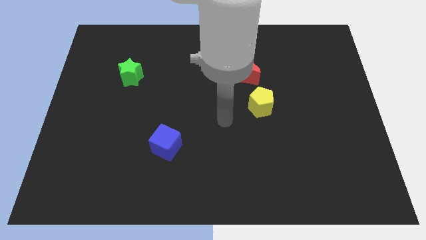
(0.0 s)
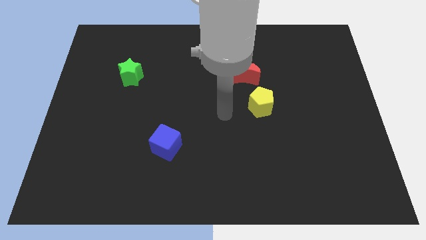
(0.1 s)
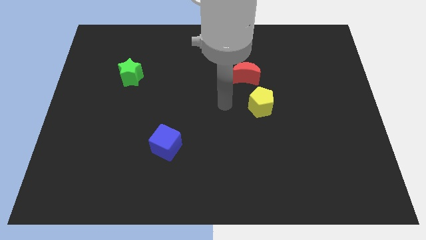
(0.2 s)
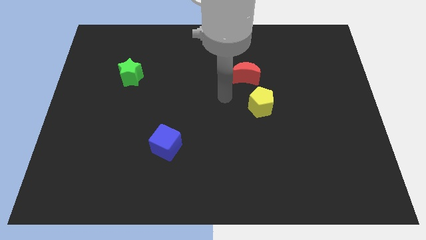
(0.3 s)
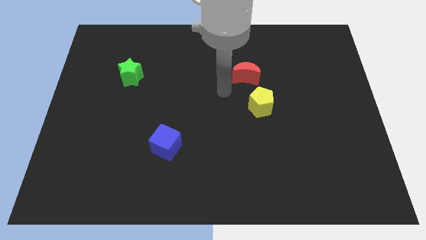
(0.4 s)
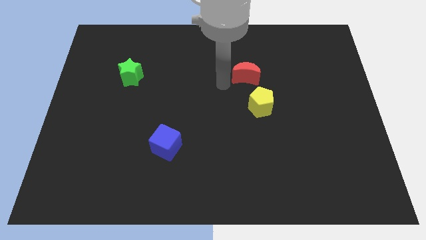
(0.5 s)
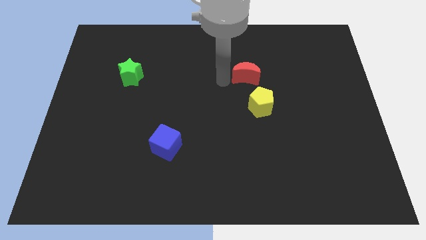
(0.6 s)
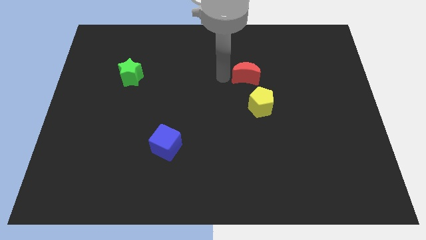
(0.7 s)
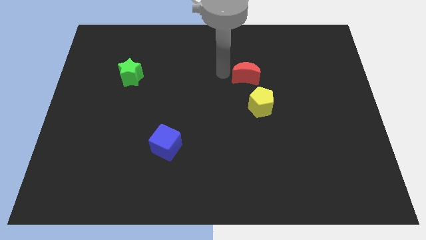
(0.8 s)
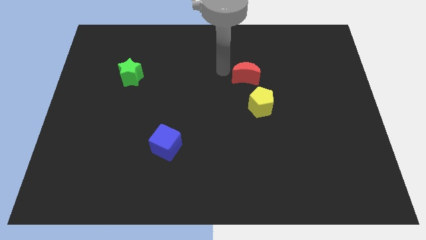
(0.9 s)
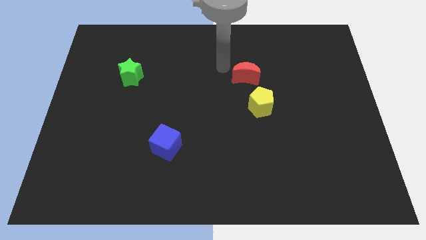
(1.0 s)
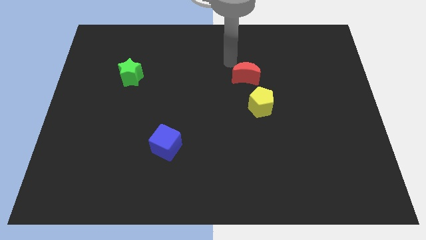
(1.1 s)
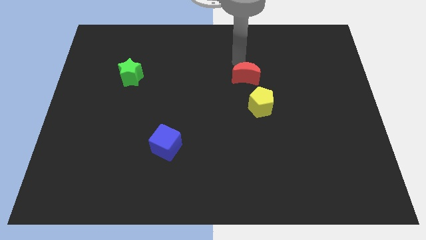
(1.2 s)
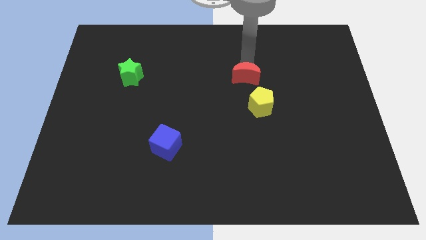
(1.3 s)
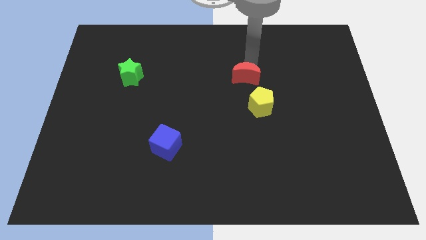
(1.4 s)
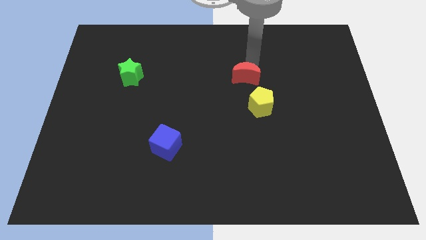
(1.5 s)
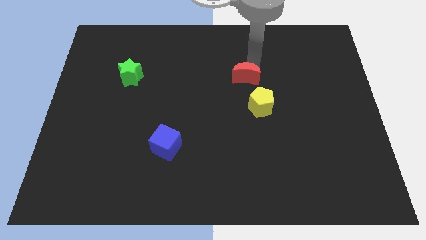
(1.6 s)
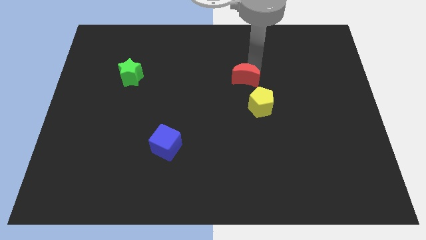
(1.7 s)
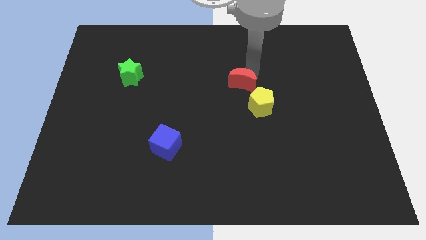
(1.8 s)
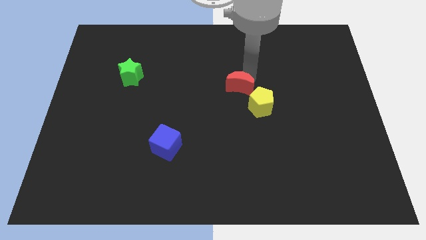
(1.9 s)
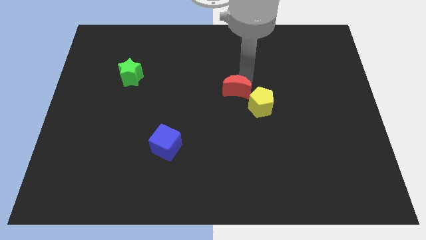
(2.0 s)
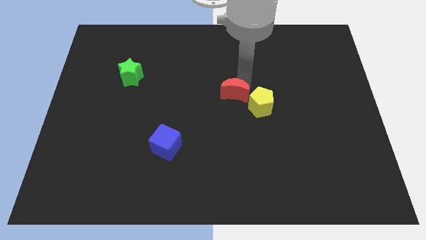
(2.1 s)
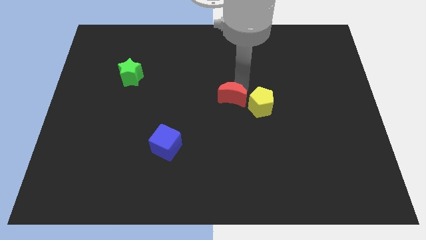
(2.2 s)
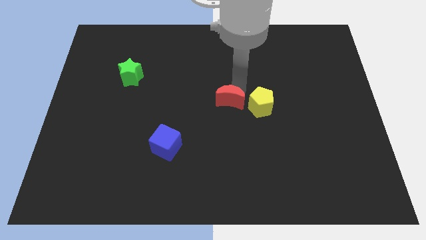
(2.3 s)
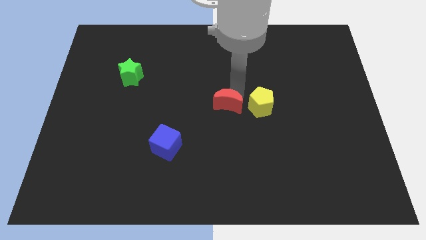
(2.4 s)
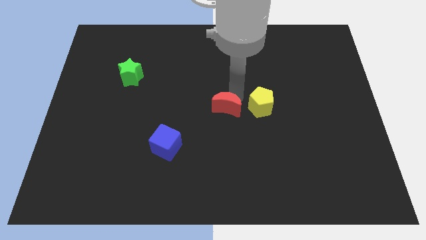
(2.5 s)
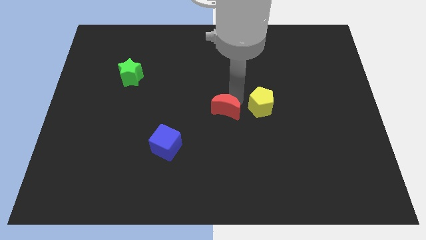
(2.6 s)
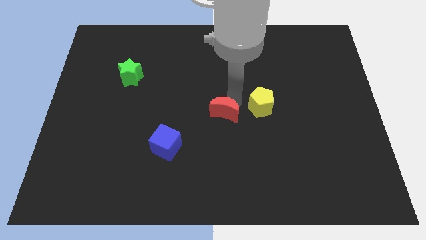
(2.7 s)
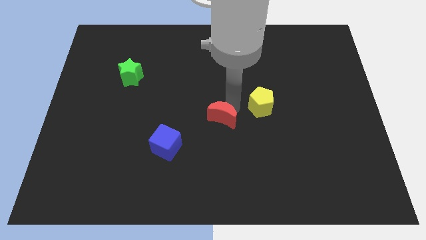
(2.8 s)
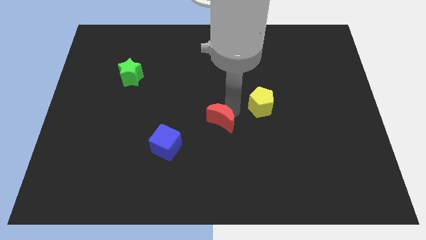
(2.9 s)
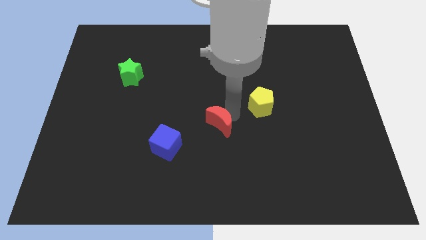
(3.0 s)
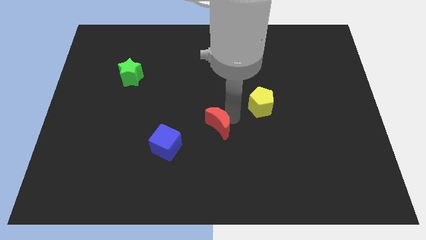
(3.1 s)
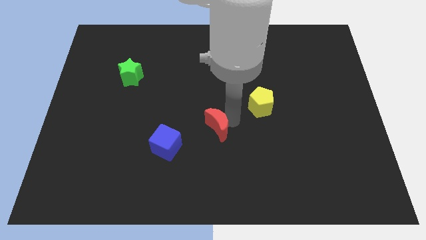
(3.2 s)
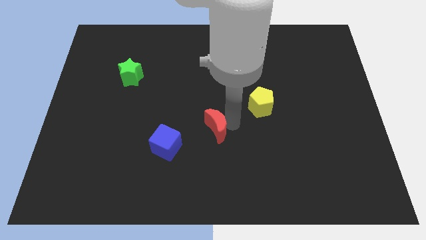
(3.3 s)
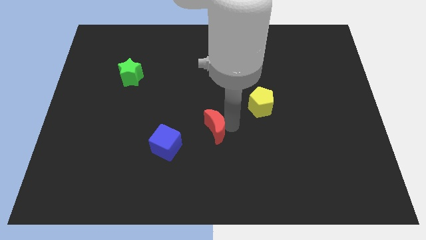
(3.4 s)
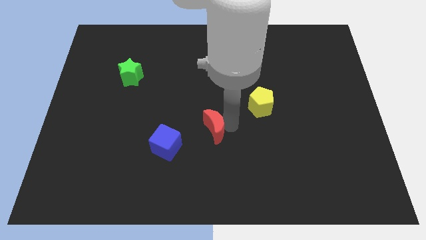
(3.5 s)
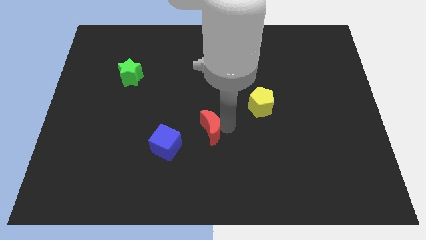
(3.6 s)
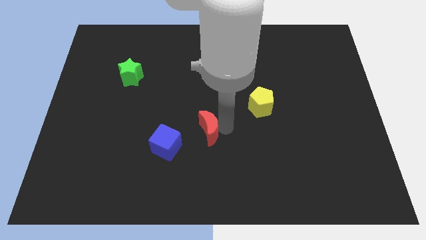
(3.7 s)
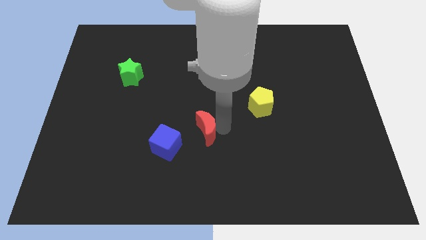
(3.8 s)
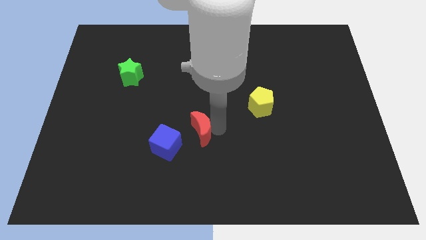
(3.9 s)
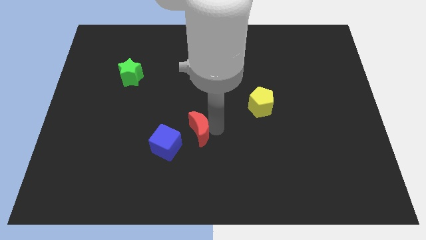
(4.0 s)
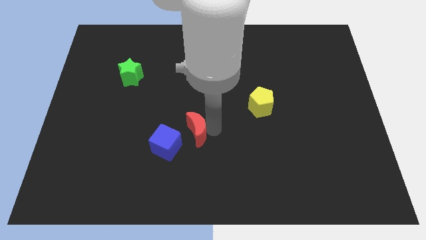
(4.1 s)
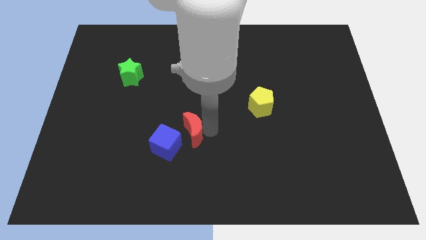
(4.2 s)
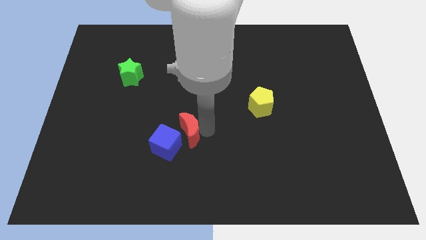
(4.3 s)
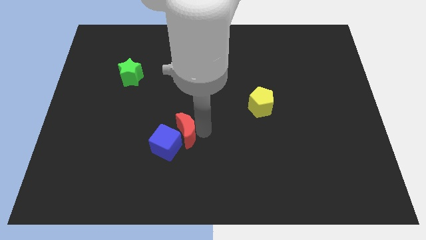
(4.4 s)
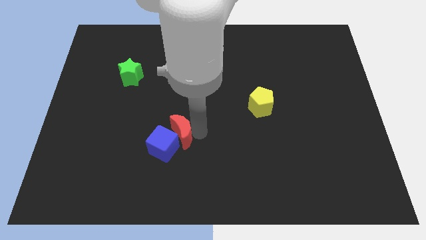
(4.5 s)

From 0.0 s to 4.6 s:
put the red block next to the blue cube

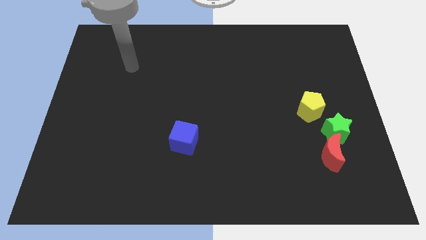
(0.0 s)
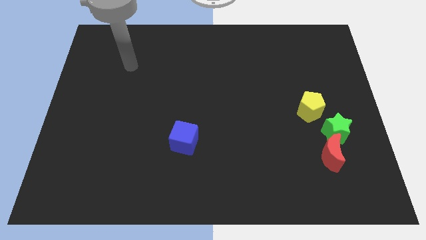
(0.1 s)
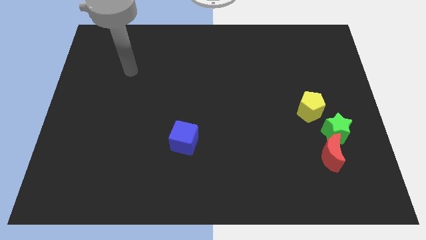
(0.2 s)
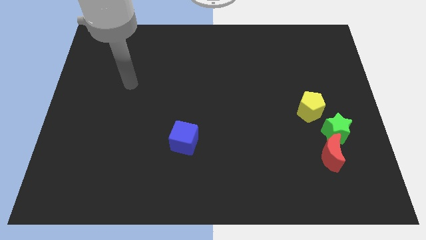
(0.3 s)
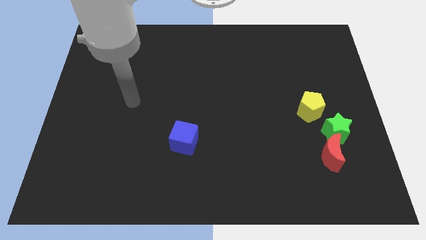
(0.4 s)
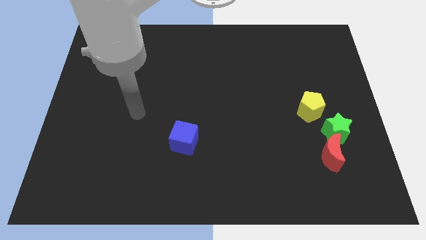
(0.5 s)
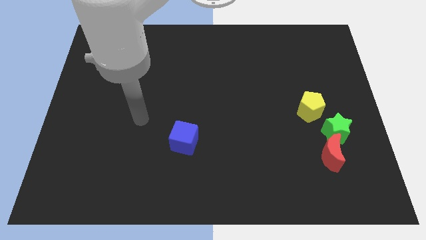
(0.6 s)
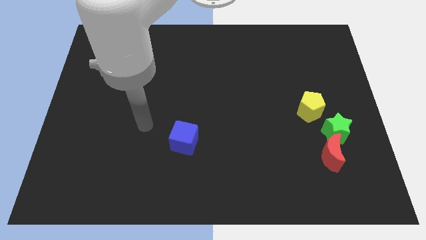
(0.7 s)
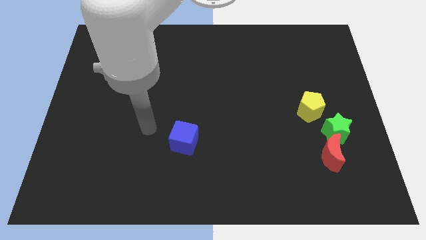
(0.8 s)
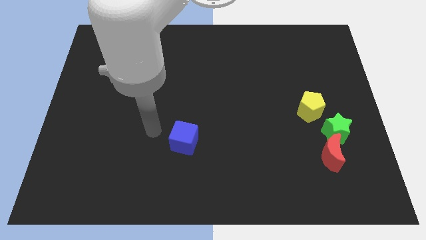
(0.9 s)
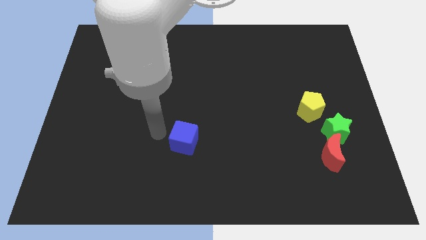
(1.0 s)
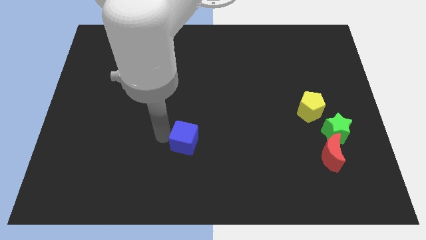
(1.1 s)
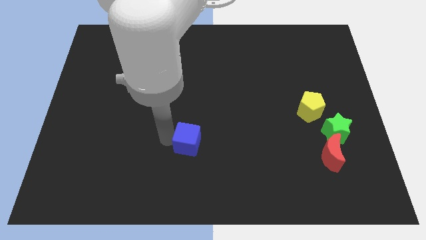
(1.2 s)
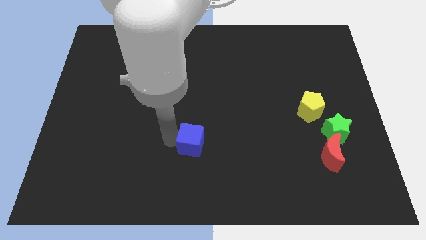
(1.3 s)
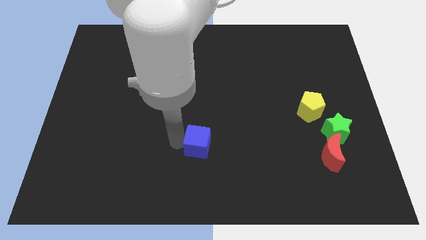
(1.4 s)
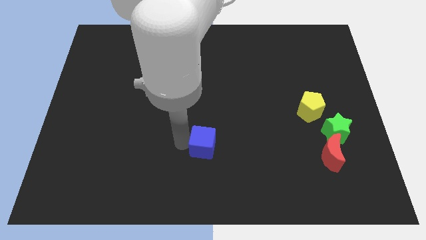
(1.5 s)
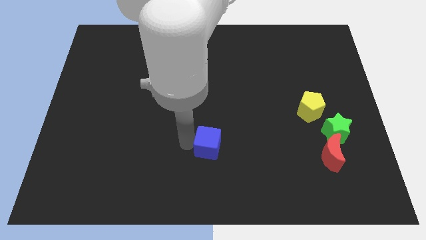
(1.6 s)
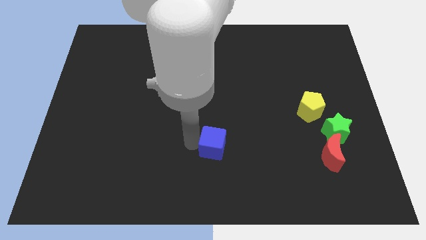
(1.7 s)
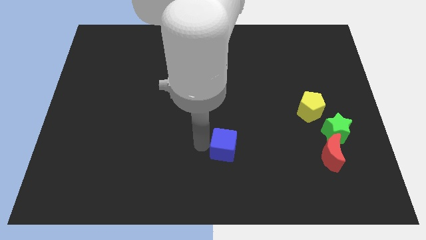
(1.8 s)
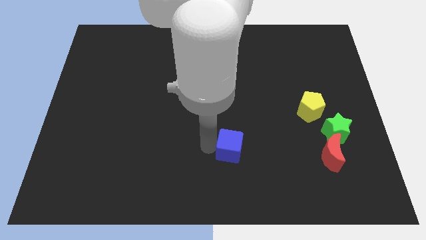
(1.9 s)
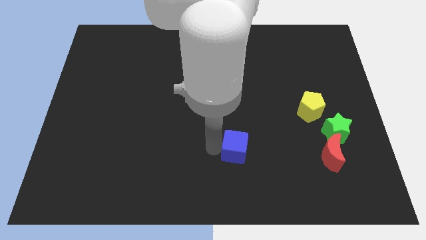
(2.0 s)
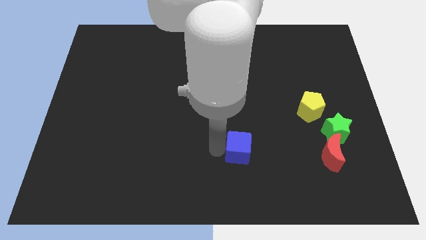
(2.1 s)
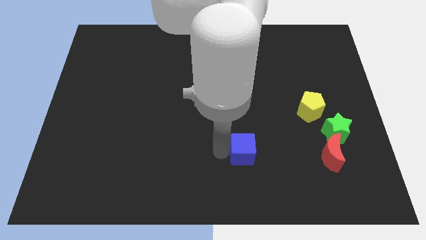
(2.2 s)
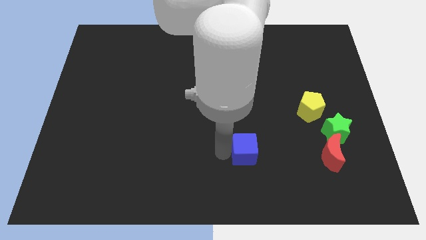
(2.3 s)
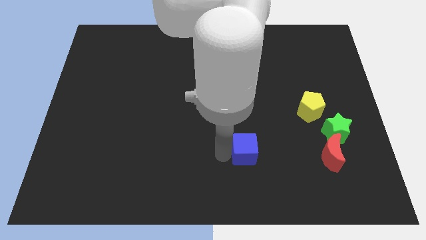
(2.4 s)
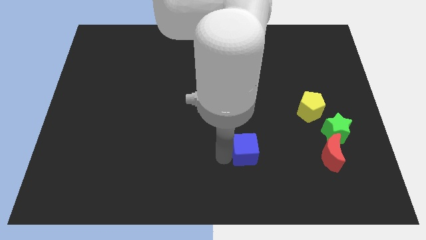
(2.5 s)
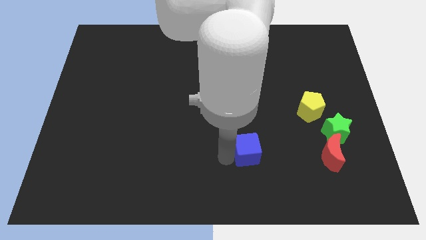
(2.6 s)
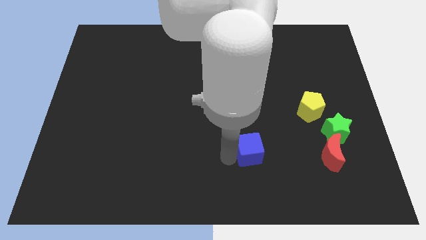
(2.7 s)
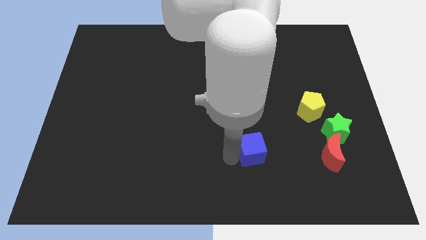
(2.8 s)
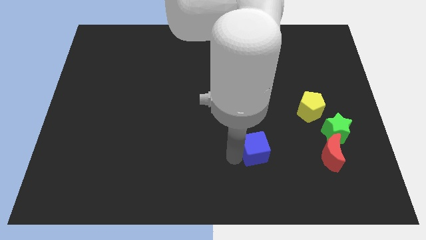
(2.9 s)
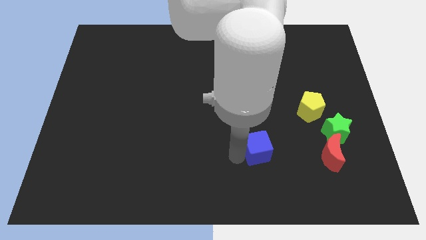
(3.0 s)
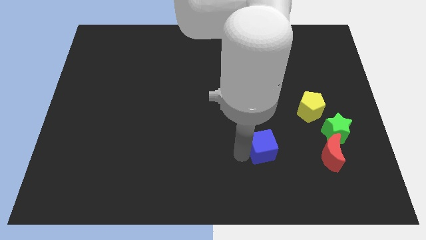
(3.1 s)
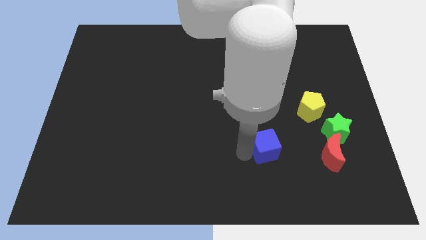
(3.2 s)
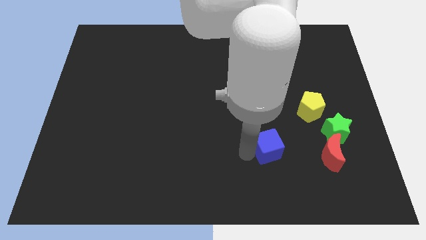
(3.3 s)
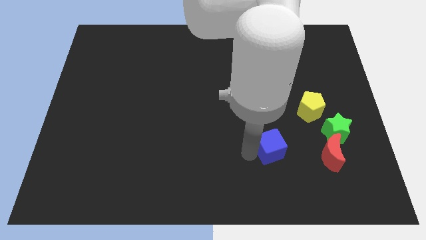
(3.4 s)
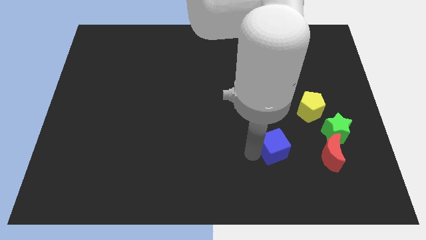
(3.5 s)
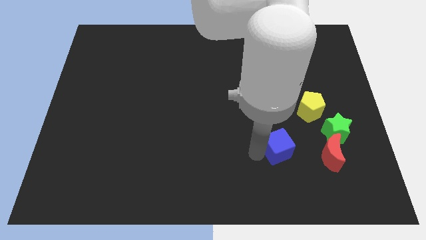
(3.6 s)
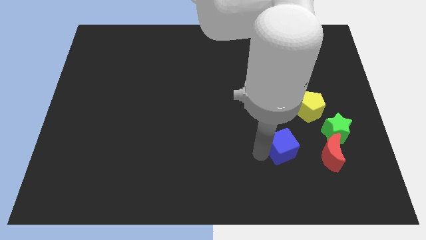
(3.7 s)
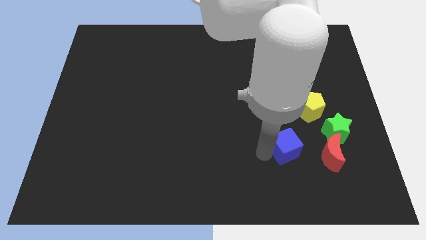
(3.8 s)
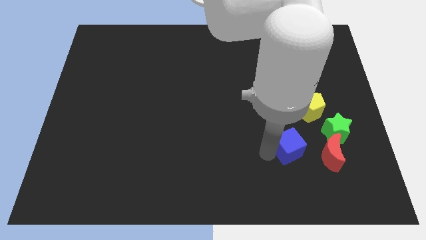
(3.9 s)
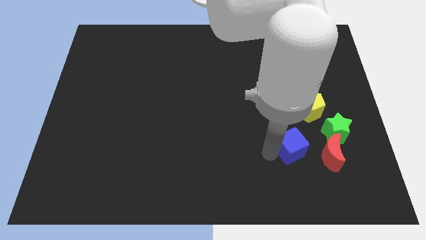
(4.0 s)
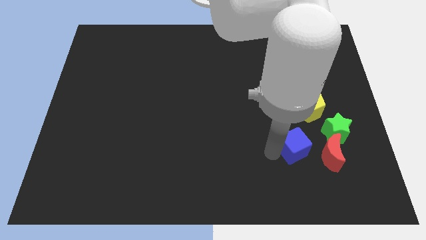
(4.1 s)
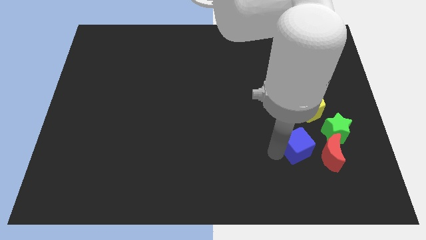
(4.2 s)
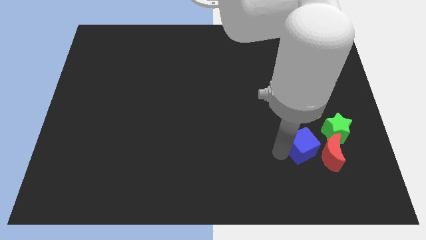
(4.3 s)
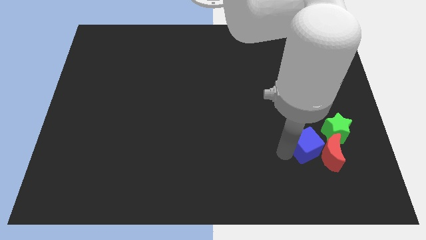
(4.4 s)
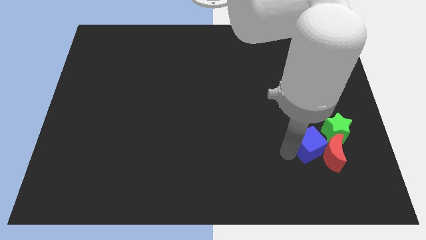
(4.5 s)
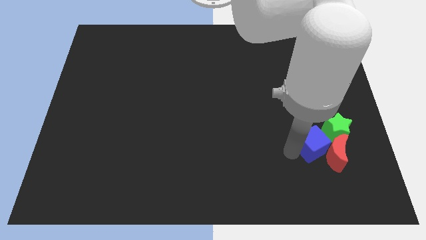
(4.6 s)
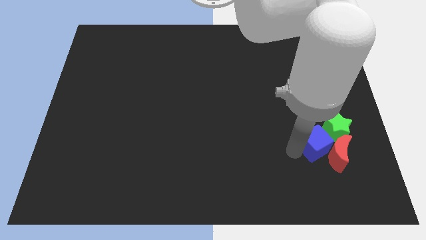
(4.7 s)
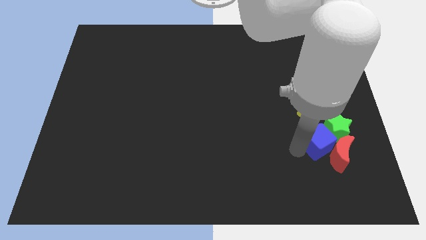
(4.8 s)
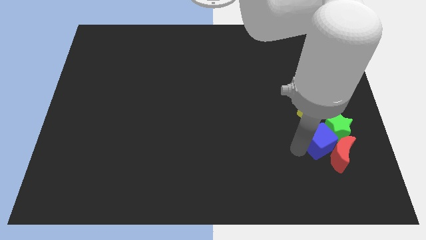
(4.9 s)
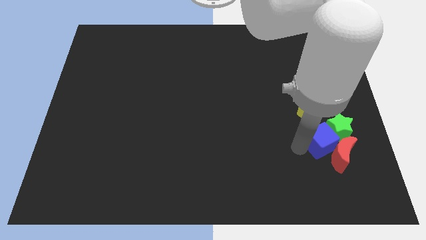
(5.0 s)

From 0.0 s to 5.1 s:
push the blue cube to the green star
